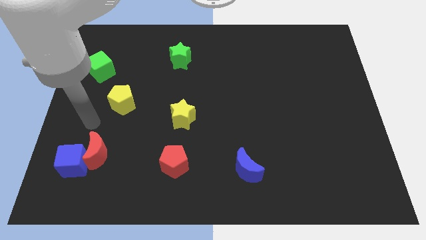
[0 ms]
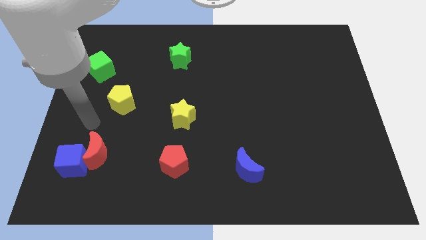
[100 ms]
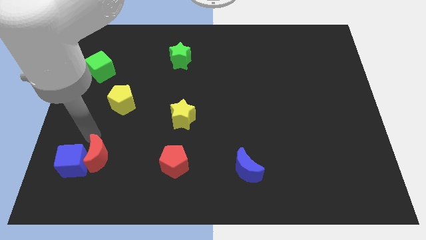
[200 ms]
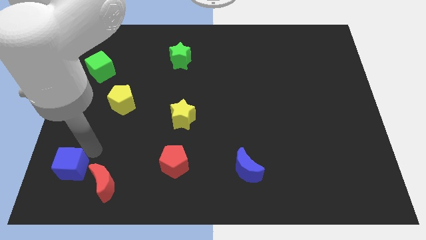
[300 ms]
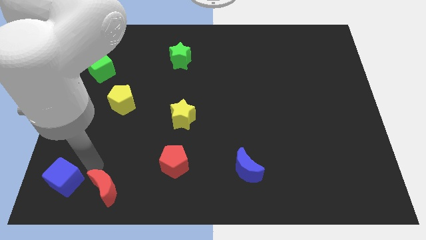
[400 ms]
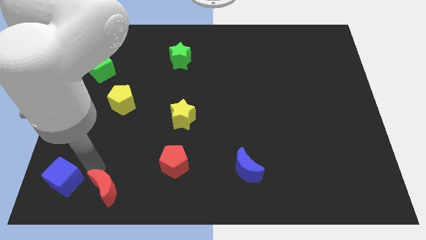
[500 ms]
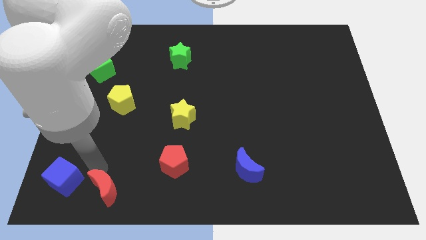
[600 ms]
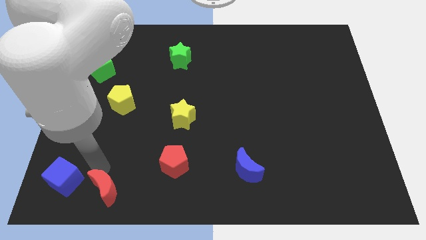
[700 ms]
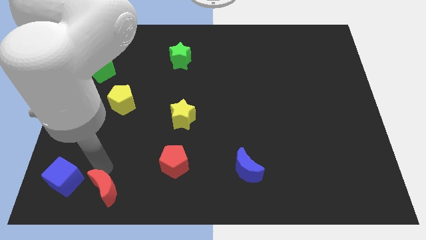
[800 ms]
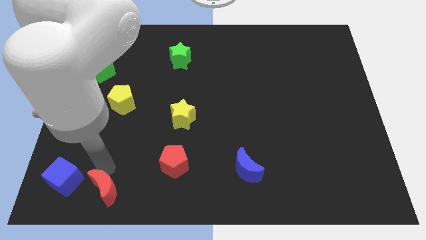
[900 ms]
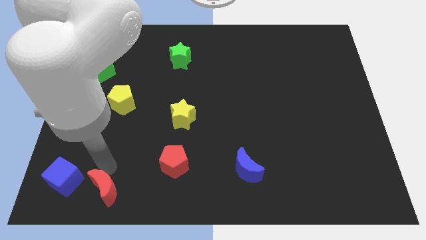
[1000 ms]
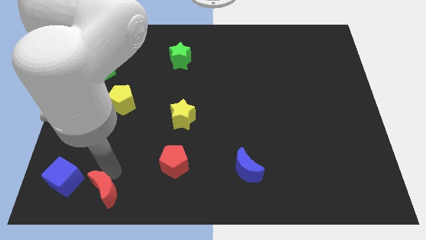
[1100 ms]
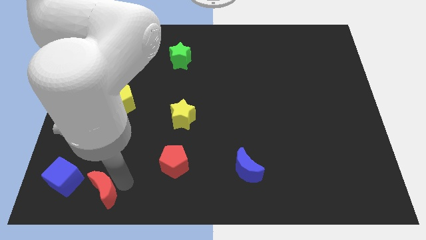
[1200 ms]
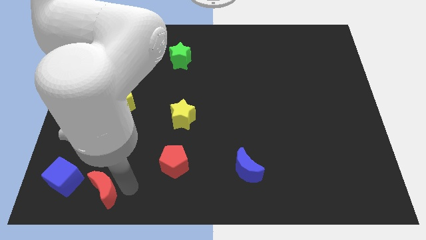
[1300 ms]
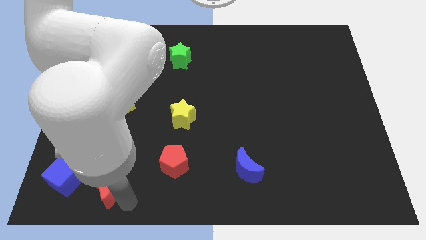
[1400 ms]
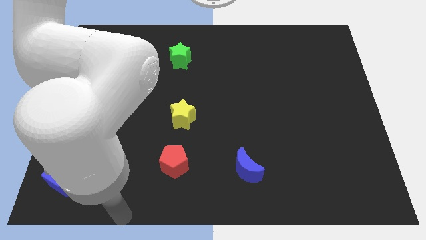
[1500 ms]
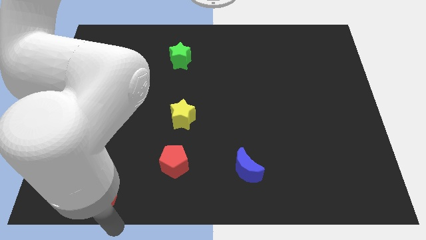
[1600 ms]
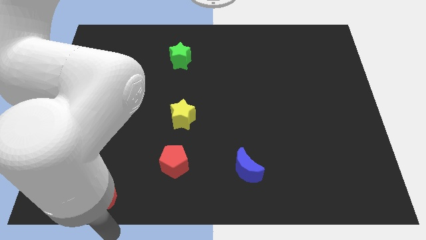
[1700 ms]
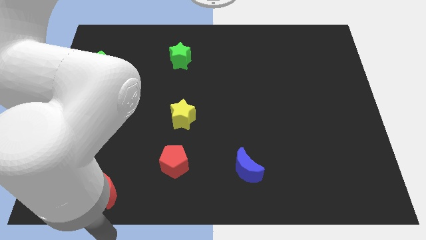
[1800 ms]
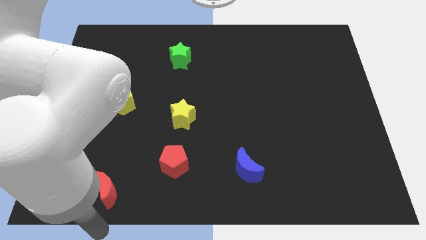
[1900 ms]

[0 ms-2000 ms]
separate red crescent from blue cube

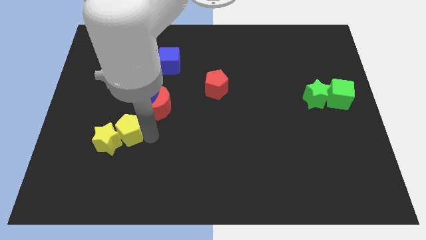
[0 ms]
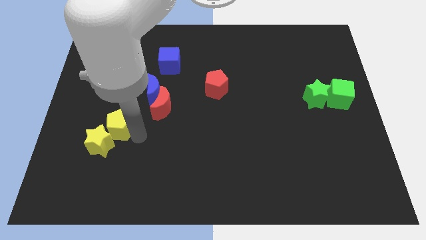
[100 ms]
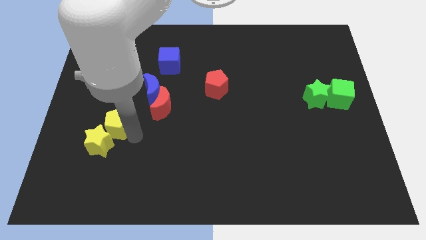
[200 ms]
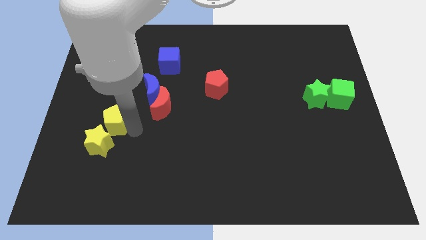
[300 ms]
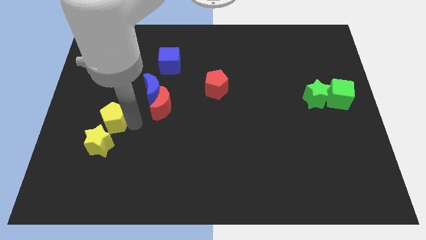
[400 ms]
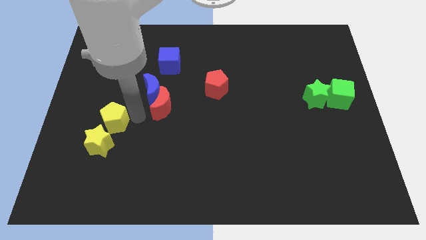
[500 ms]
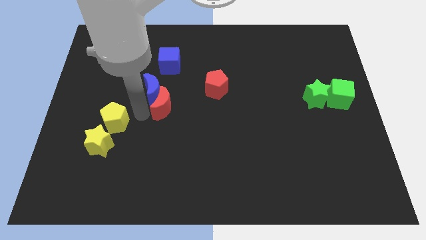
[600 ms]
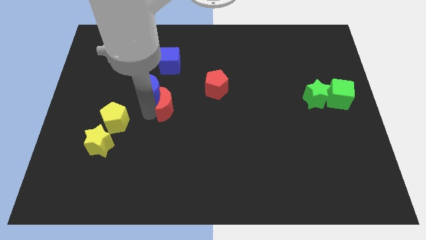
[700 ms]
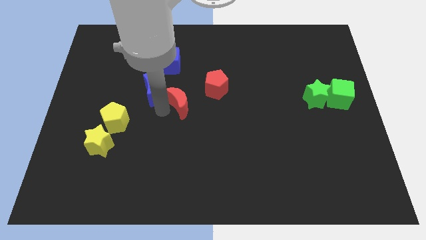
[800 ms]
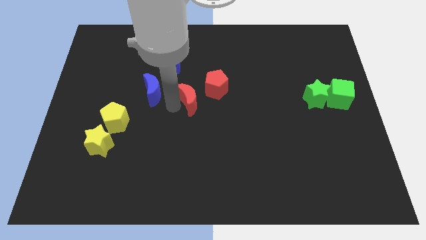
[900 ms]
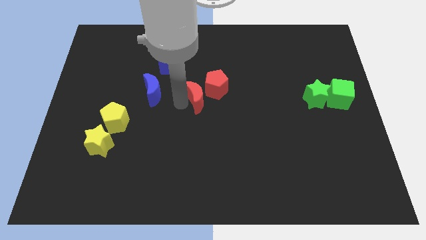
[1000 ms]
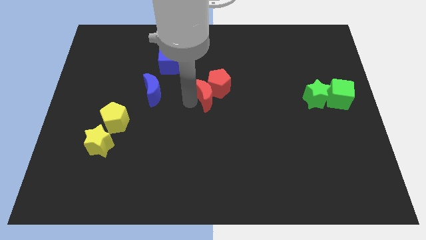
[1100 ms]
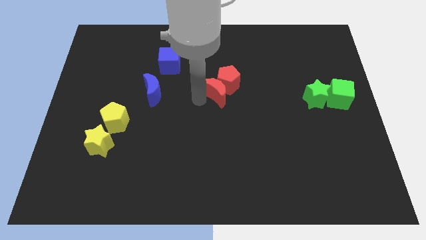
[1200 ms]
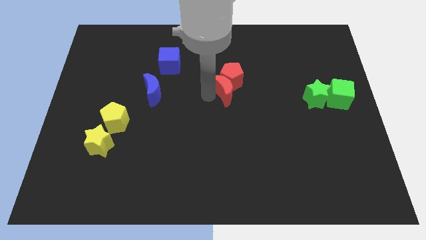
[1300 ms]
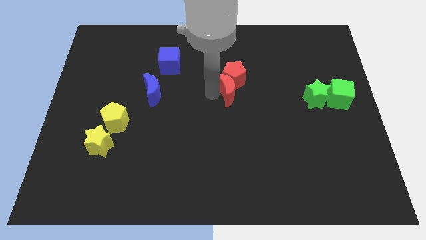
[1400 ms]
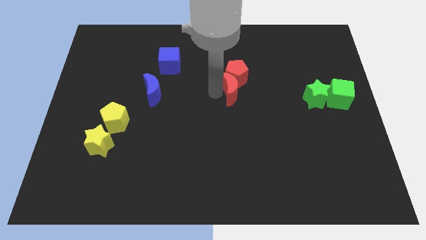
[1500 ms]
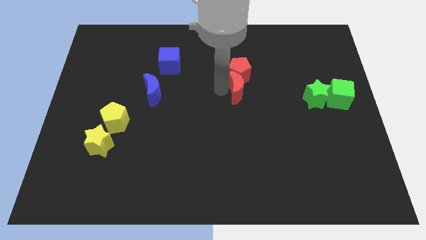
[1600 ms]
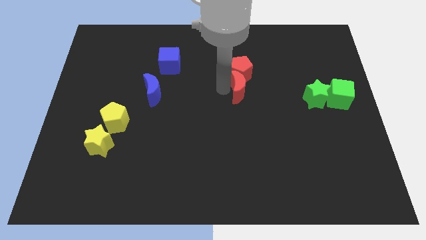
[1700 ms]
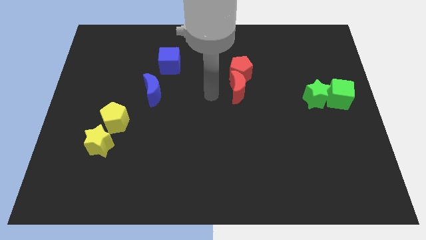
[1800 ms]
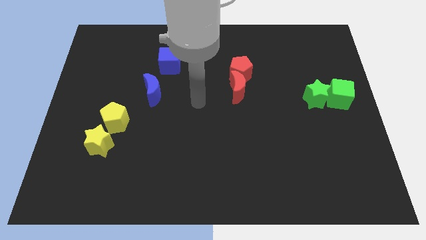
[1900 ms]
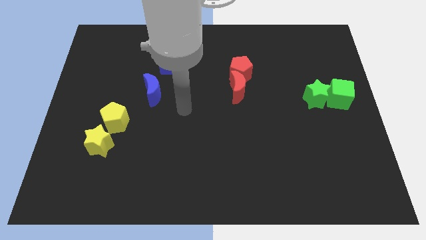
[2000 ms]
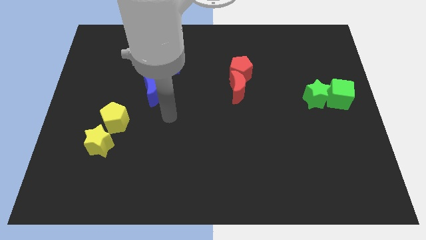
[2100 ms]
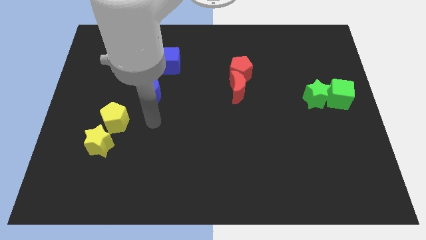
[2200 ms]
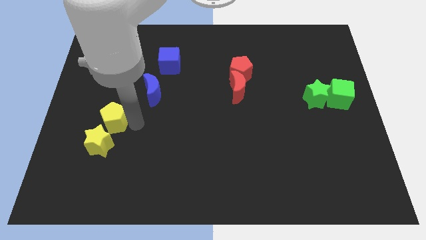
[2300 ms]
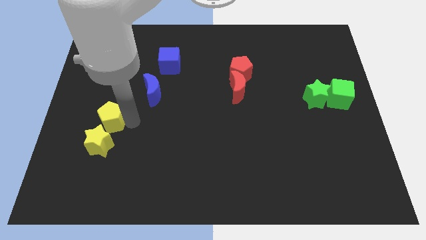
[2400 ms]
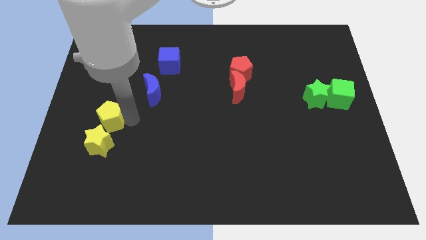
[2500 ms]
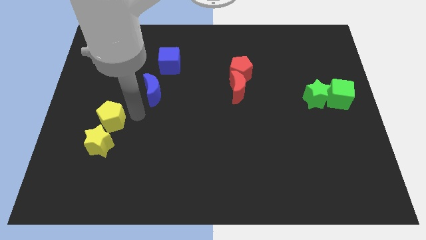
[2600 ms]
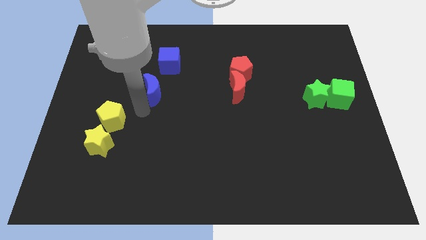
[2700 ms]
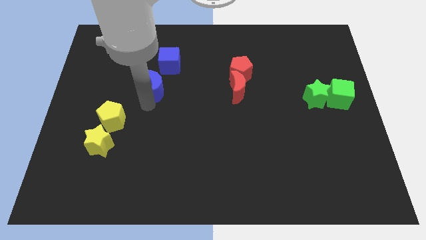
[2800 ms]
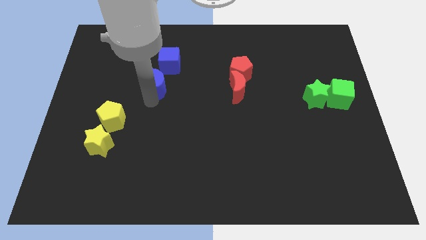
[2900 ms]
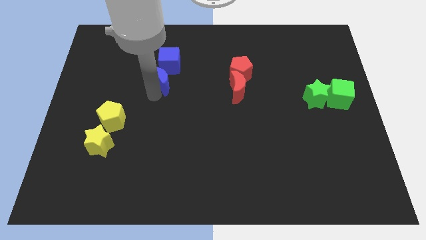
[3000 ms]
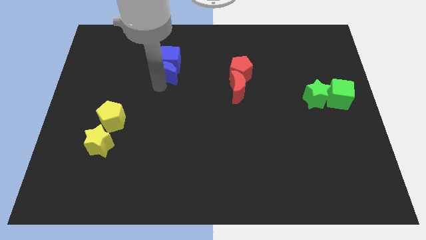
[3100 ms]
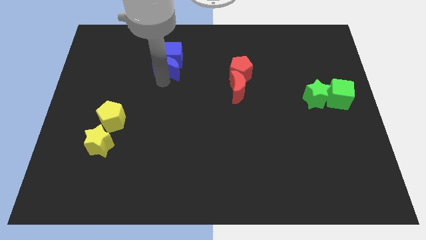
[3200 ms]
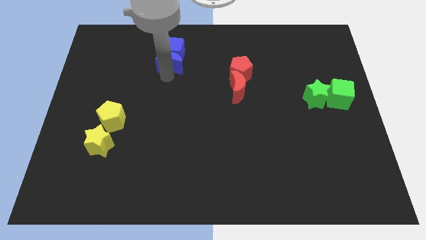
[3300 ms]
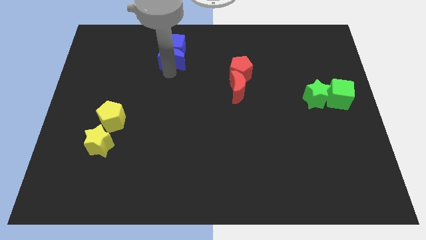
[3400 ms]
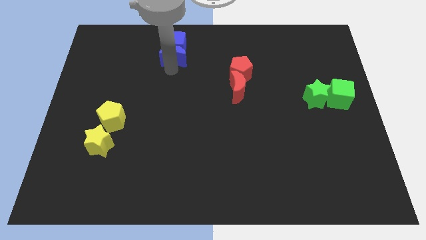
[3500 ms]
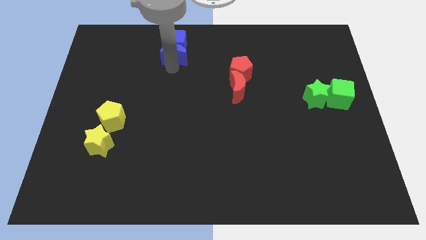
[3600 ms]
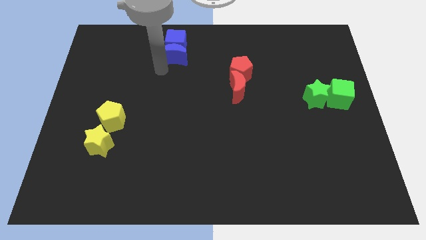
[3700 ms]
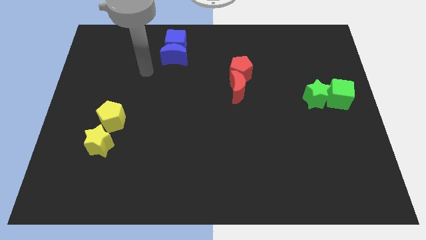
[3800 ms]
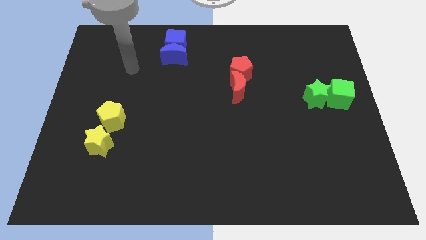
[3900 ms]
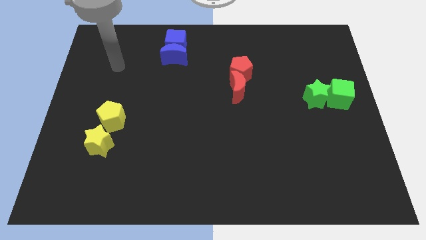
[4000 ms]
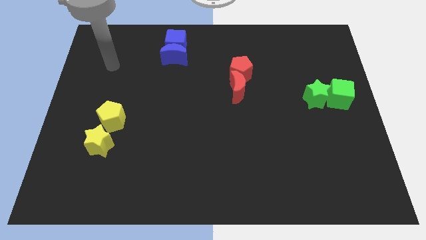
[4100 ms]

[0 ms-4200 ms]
move the blue crescent into the bottom side of the blue cube

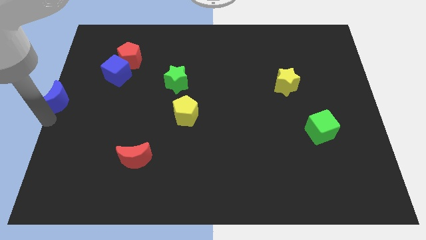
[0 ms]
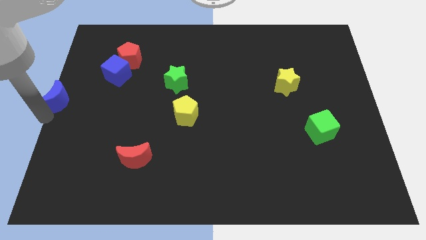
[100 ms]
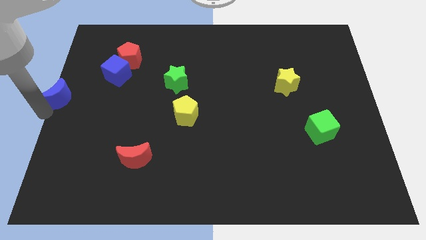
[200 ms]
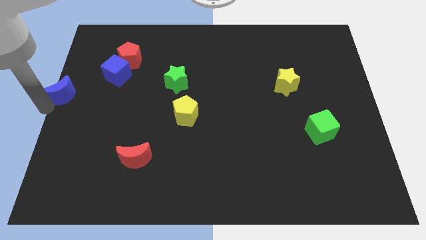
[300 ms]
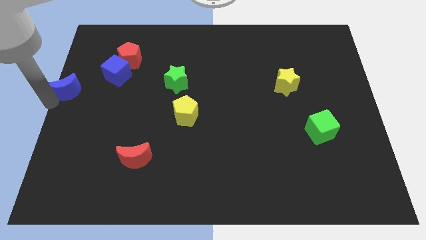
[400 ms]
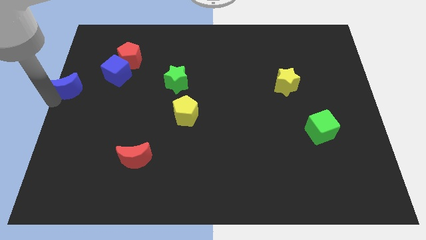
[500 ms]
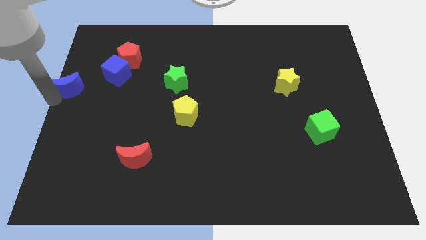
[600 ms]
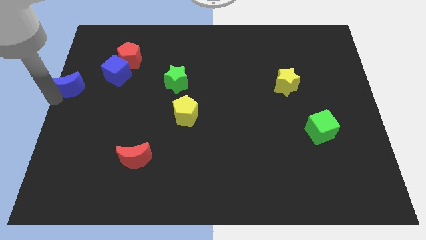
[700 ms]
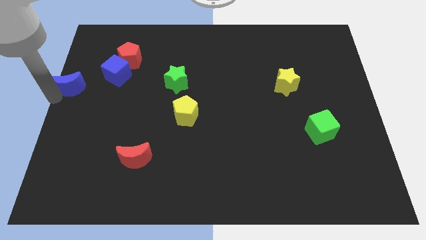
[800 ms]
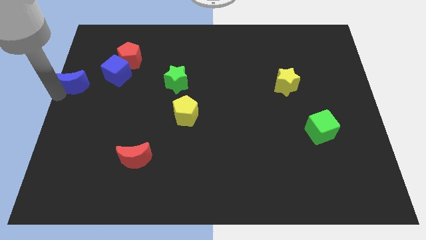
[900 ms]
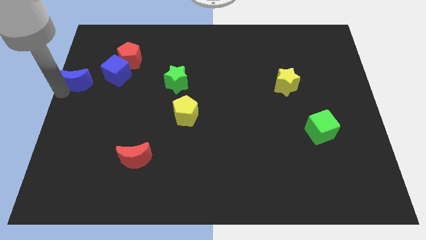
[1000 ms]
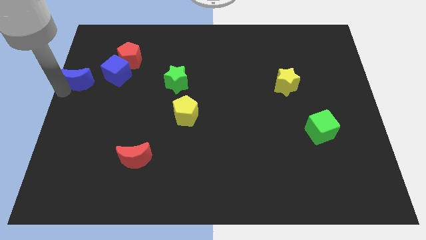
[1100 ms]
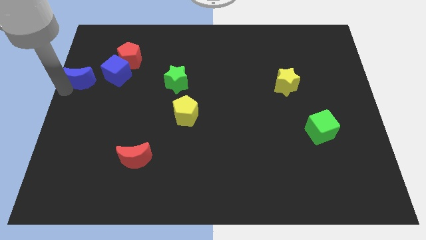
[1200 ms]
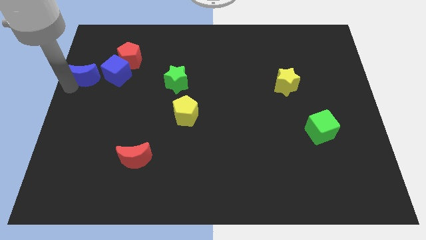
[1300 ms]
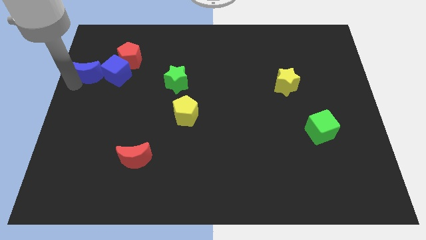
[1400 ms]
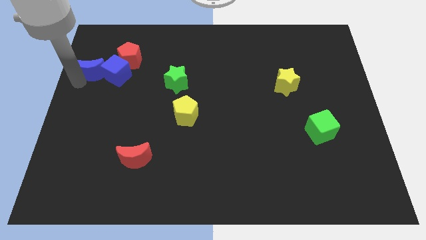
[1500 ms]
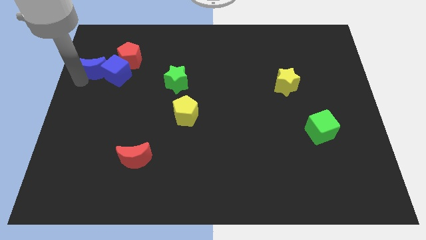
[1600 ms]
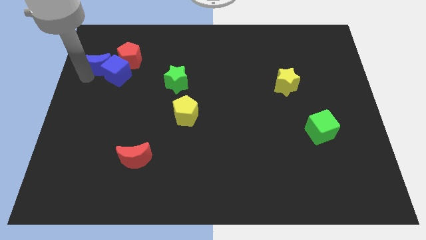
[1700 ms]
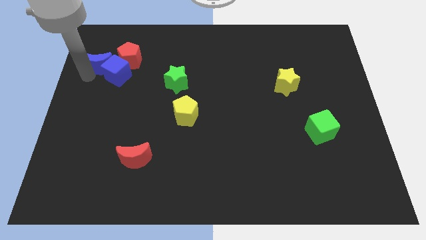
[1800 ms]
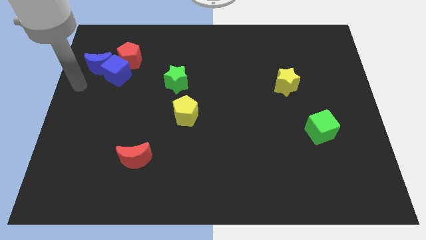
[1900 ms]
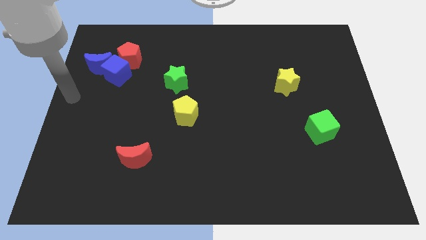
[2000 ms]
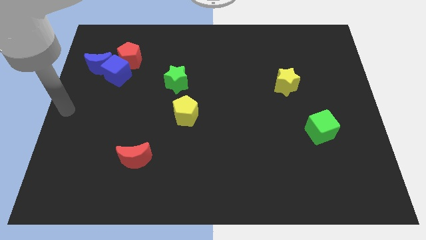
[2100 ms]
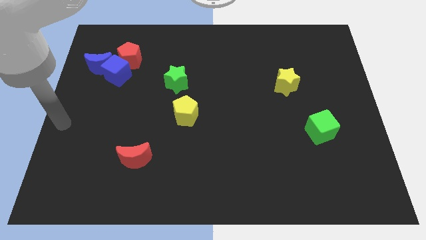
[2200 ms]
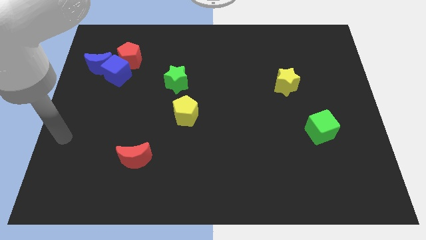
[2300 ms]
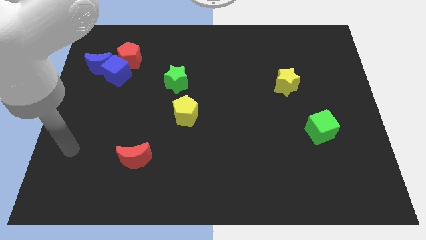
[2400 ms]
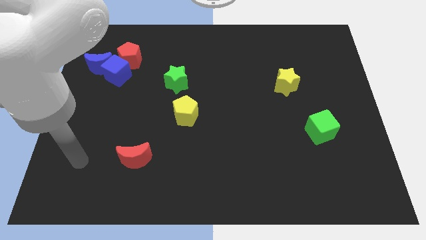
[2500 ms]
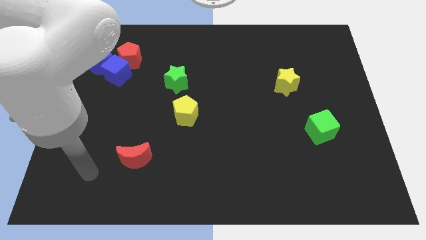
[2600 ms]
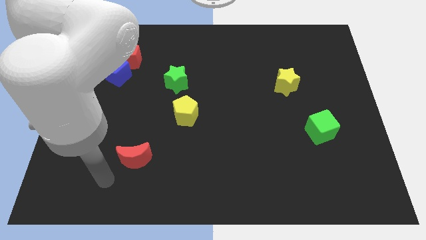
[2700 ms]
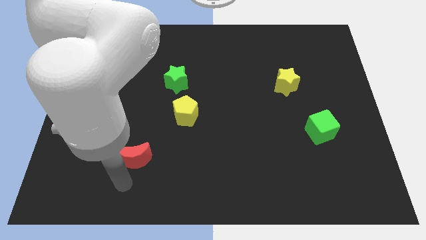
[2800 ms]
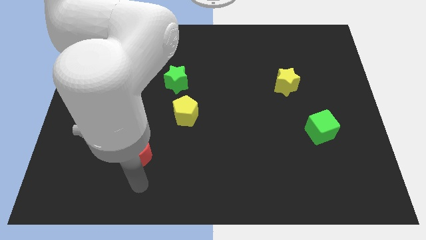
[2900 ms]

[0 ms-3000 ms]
place blue moon to the left of the red pentagon
